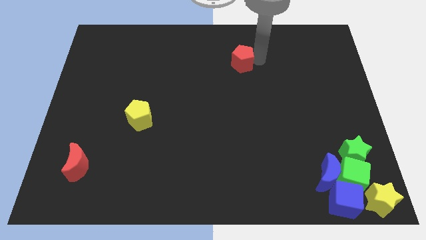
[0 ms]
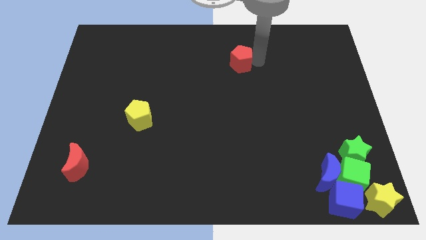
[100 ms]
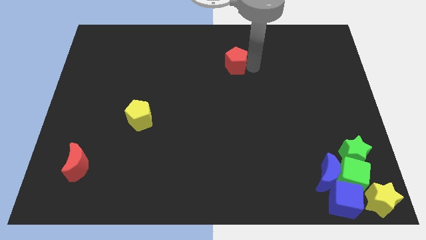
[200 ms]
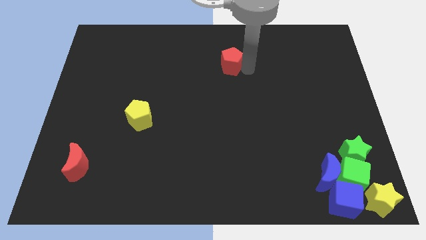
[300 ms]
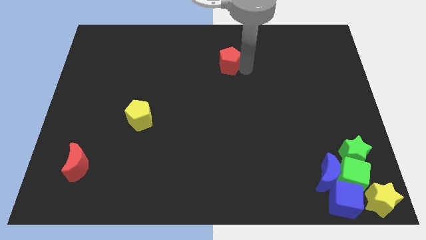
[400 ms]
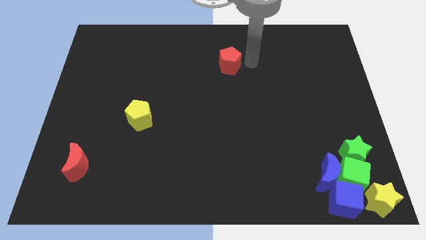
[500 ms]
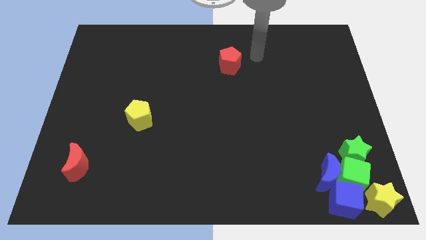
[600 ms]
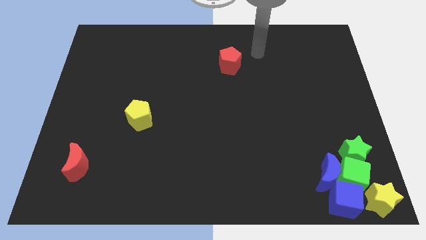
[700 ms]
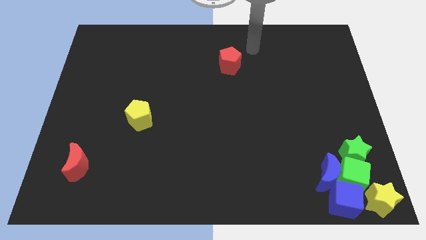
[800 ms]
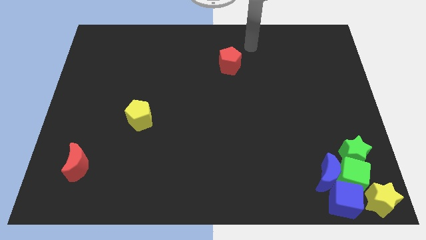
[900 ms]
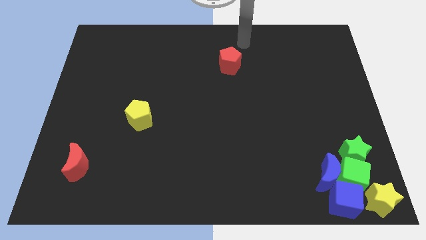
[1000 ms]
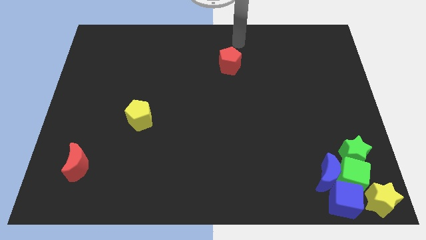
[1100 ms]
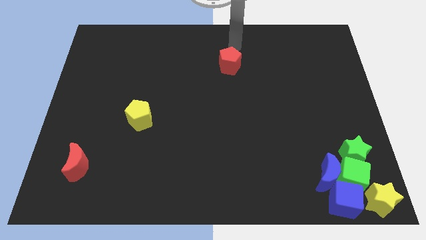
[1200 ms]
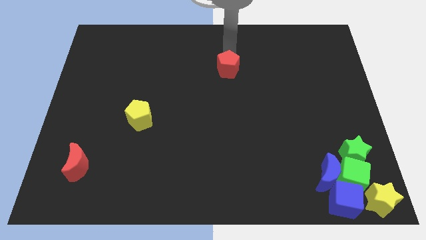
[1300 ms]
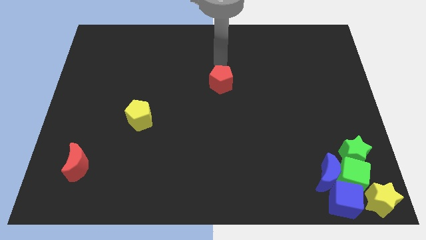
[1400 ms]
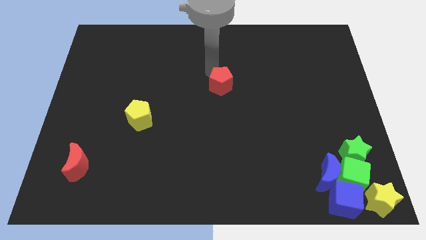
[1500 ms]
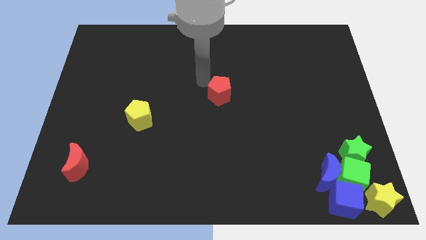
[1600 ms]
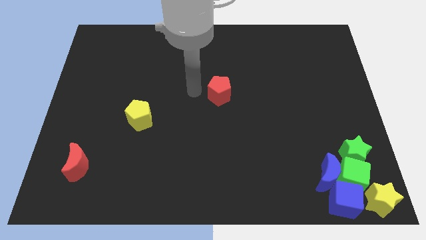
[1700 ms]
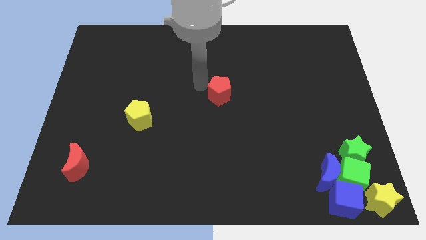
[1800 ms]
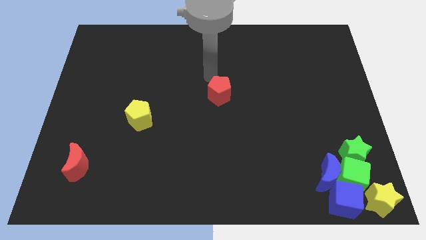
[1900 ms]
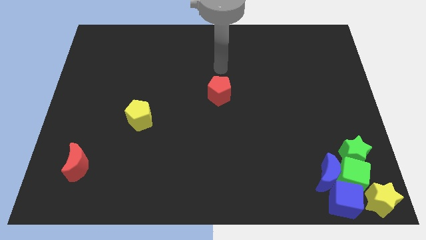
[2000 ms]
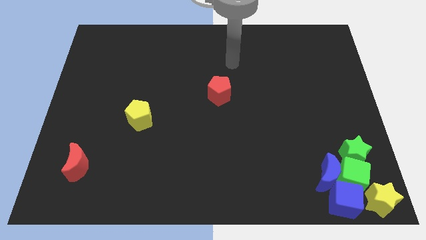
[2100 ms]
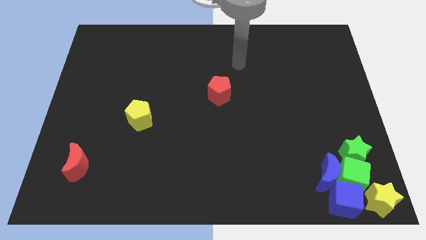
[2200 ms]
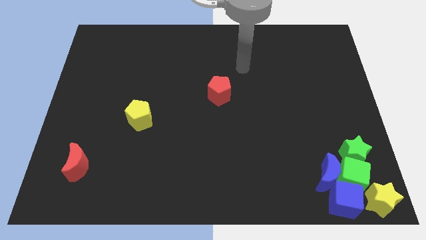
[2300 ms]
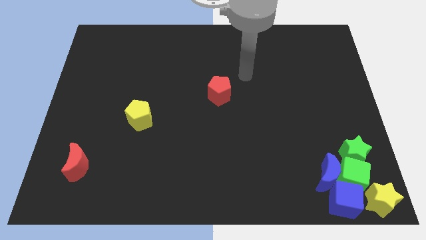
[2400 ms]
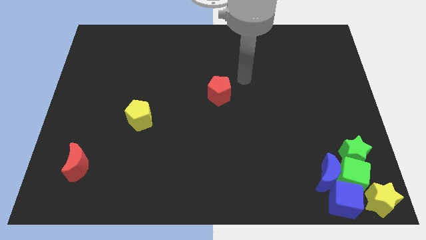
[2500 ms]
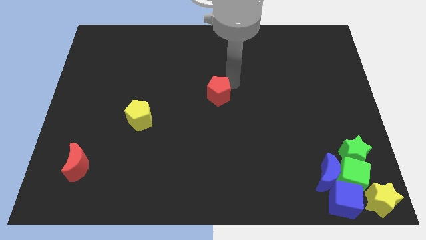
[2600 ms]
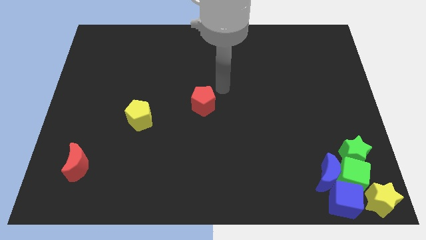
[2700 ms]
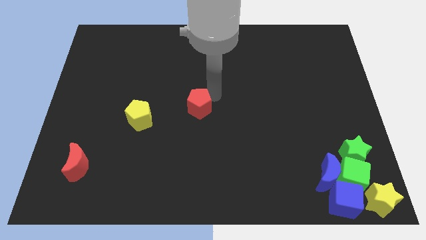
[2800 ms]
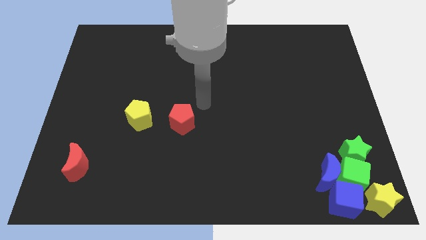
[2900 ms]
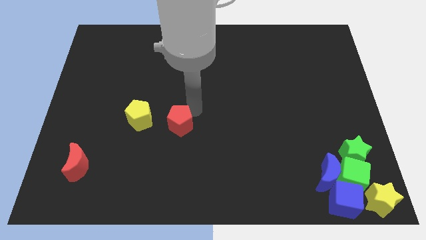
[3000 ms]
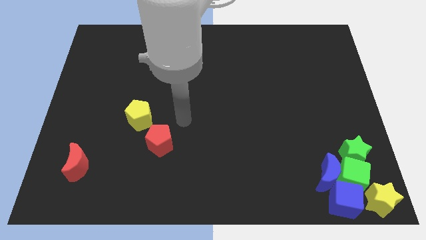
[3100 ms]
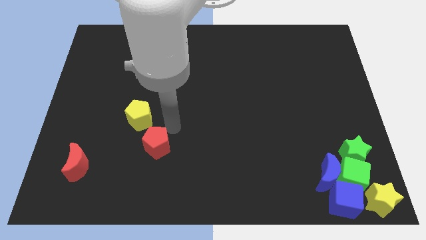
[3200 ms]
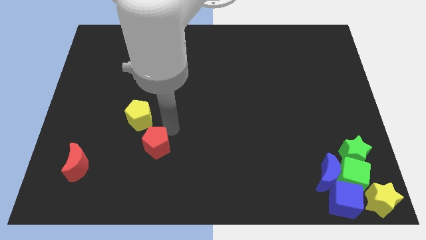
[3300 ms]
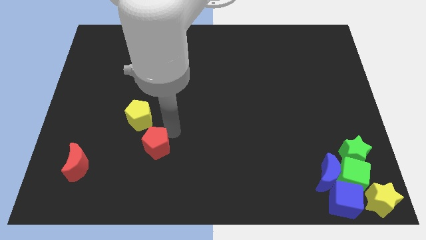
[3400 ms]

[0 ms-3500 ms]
place red pentagon to the bottom right of yellow pentagon

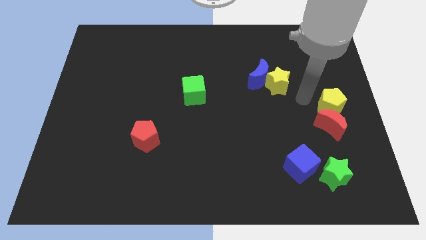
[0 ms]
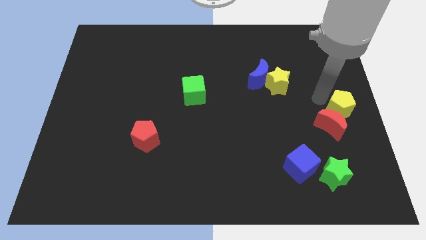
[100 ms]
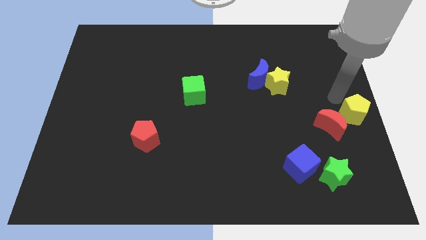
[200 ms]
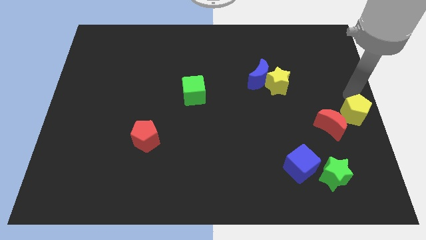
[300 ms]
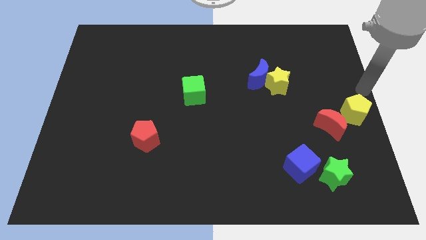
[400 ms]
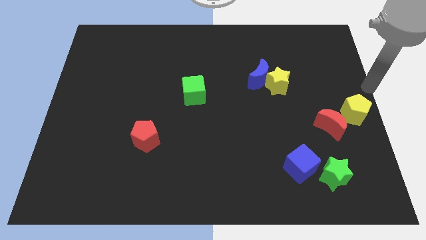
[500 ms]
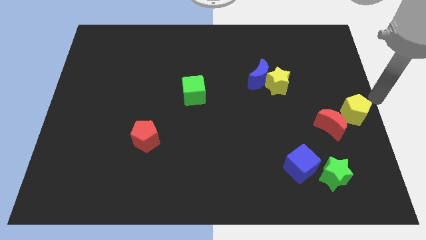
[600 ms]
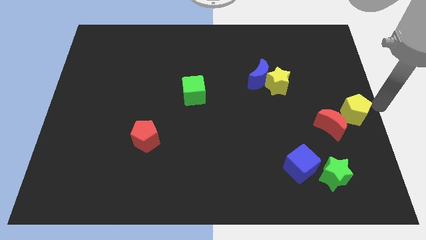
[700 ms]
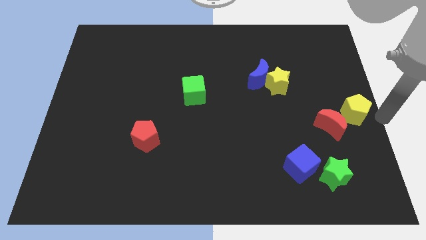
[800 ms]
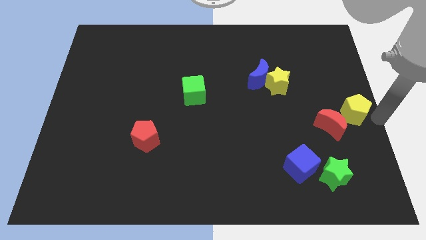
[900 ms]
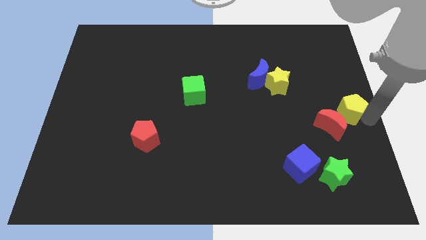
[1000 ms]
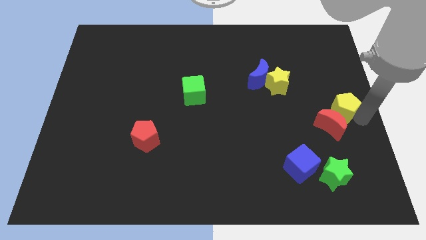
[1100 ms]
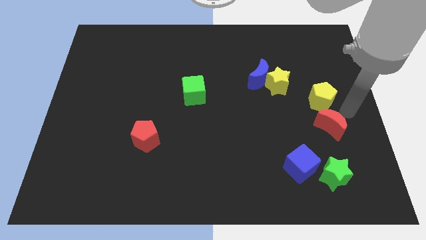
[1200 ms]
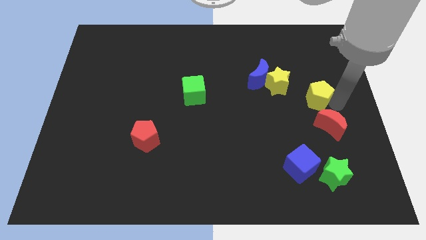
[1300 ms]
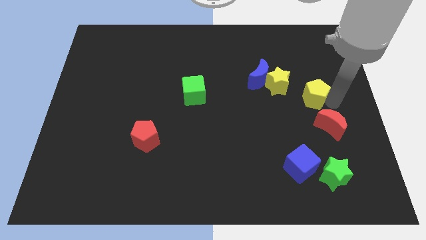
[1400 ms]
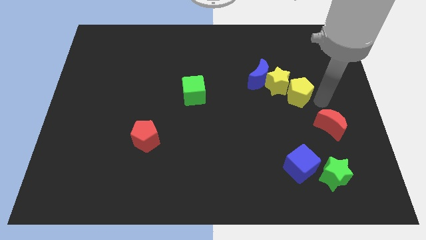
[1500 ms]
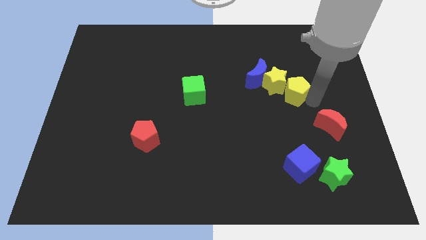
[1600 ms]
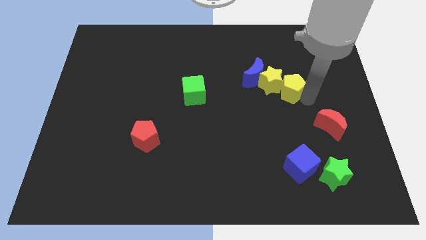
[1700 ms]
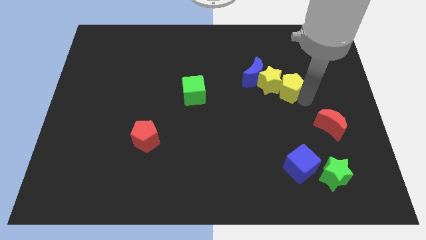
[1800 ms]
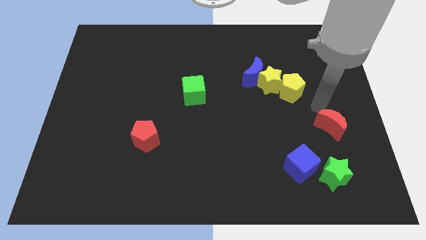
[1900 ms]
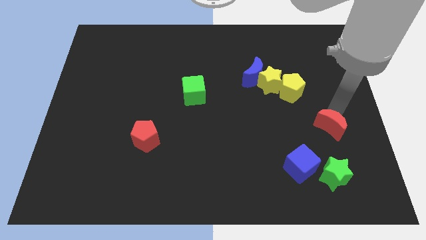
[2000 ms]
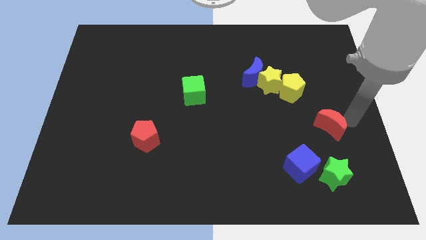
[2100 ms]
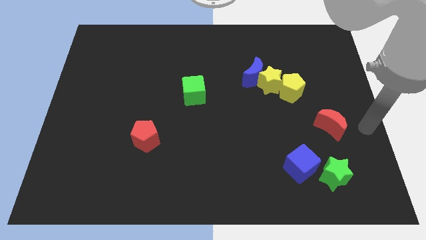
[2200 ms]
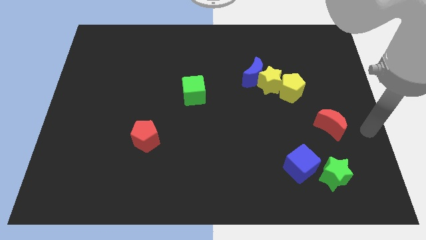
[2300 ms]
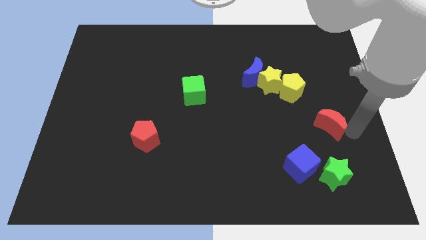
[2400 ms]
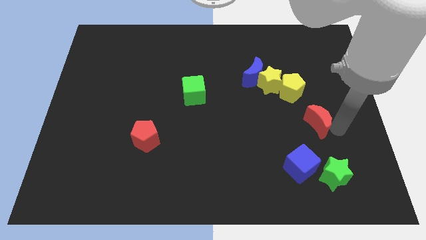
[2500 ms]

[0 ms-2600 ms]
push the yellow pentagon close to the yellow star

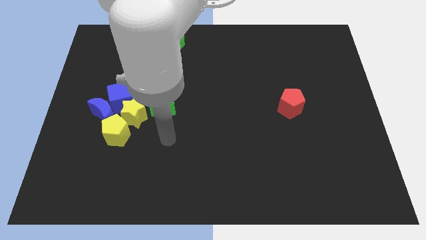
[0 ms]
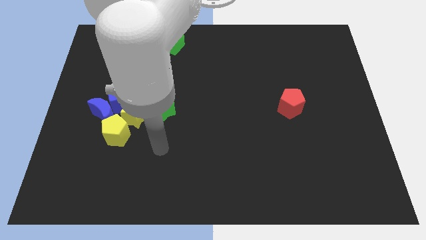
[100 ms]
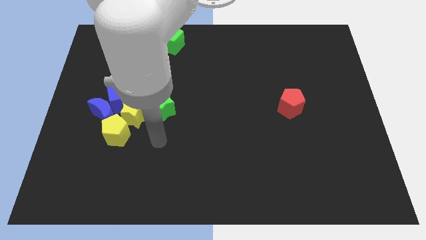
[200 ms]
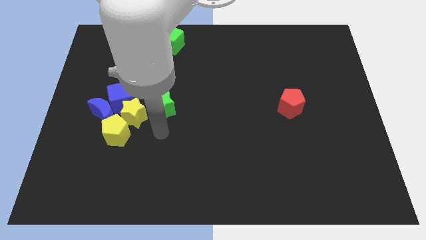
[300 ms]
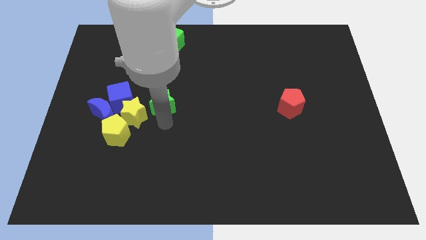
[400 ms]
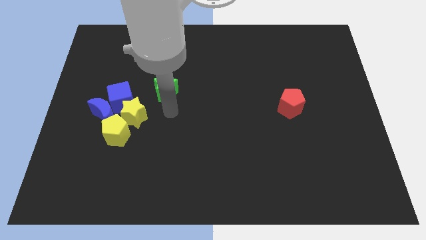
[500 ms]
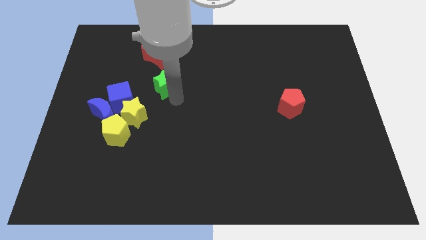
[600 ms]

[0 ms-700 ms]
push the green star diagonally top right to the yellow star

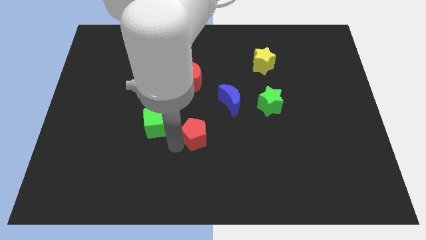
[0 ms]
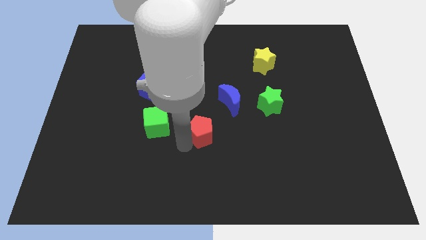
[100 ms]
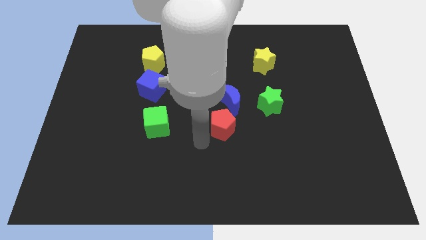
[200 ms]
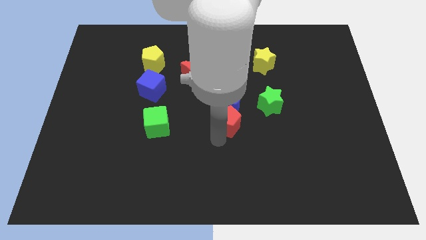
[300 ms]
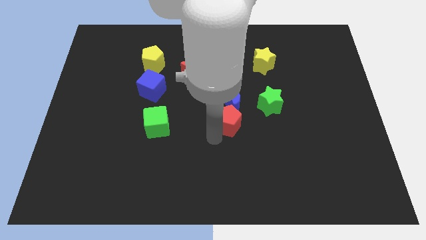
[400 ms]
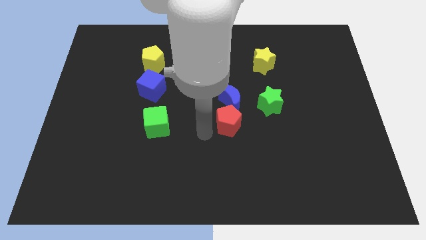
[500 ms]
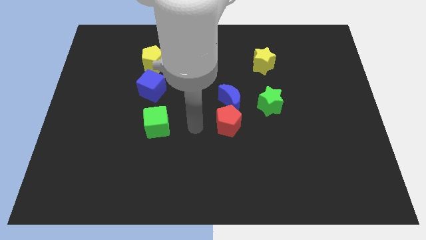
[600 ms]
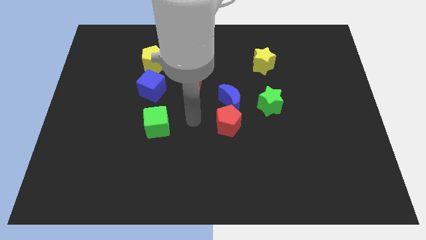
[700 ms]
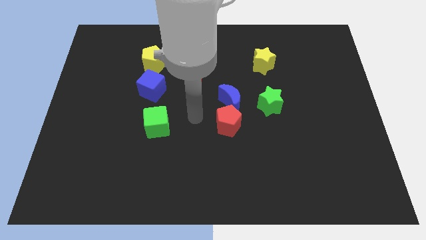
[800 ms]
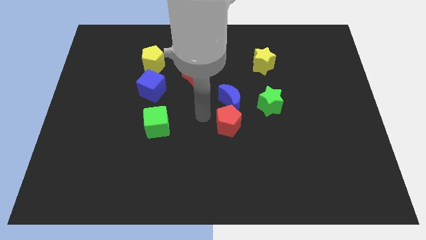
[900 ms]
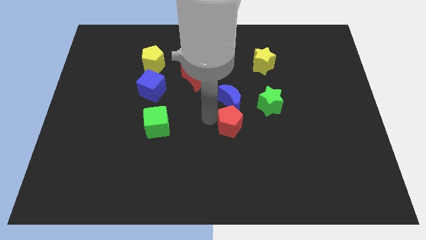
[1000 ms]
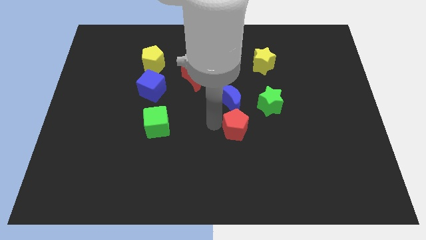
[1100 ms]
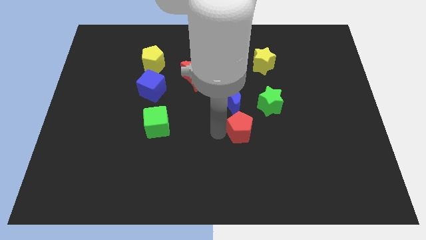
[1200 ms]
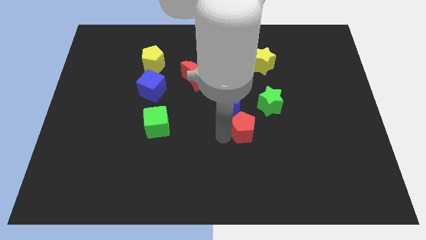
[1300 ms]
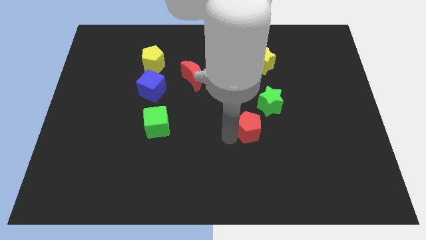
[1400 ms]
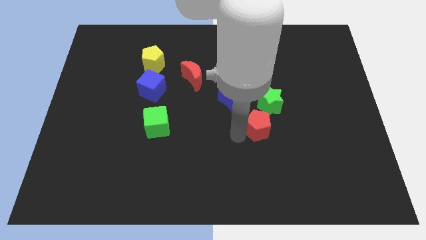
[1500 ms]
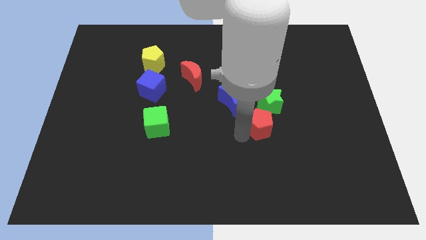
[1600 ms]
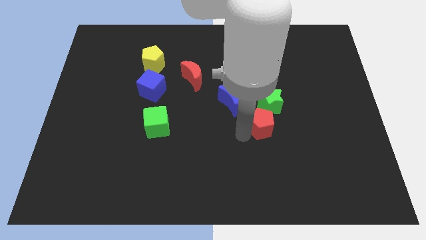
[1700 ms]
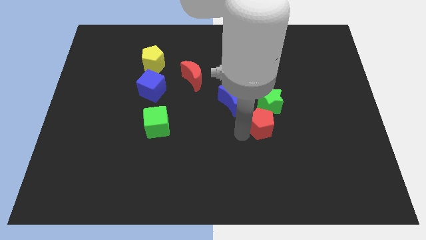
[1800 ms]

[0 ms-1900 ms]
place the red pentagon to the bottom left of the green star

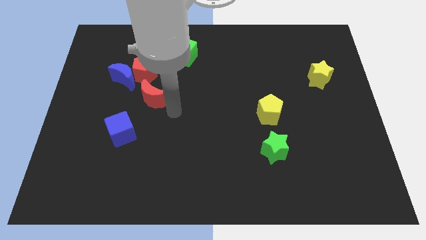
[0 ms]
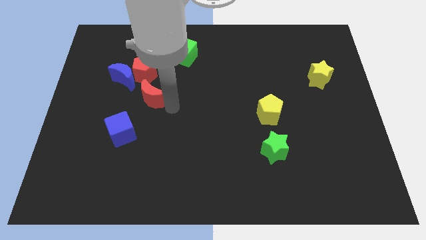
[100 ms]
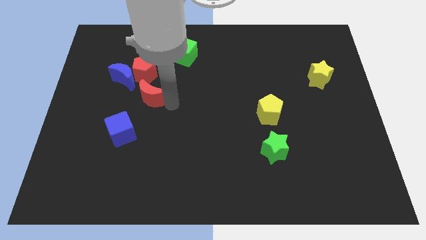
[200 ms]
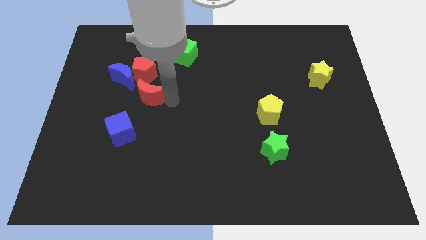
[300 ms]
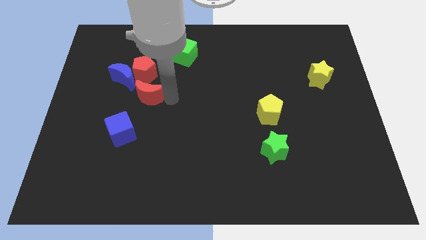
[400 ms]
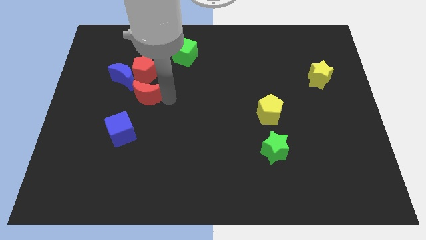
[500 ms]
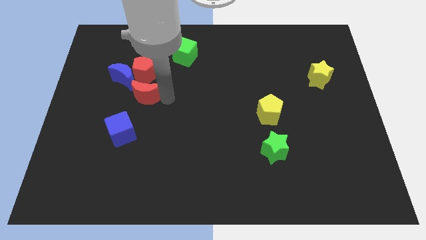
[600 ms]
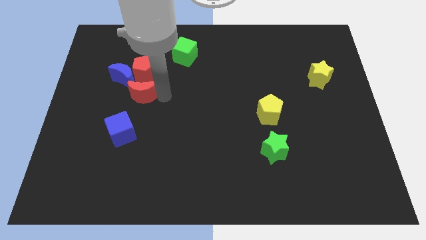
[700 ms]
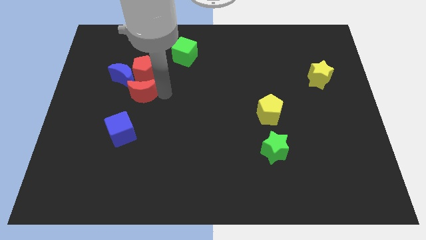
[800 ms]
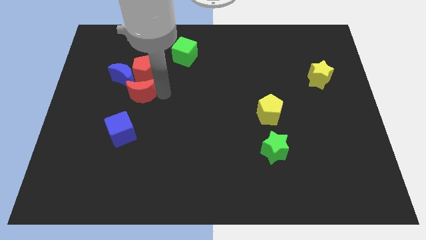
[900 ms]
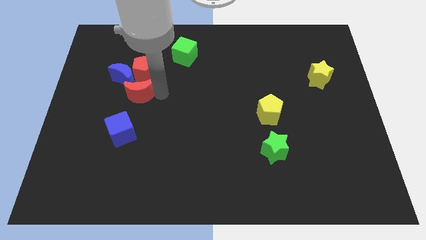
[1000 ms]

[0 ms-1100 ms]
move red crescent below the red pentagon
